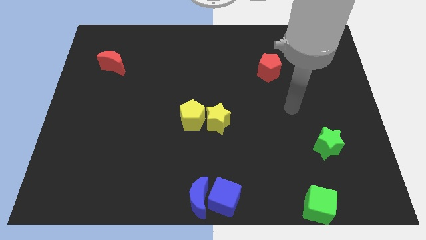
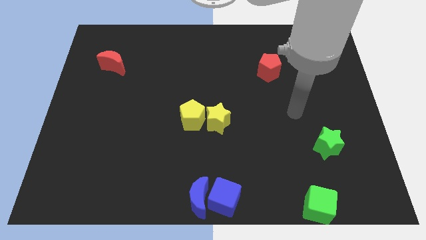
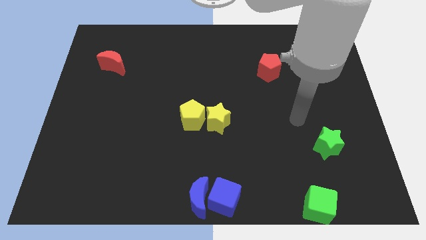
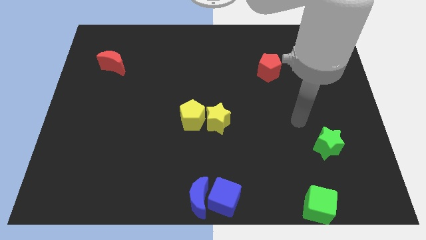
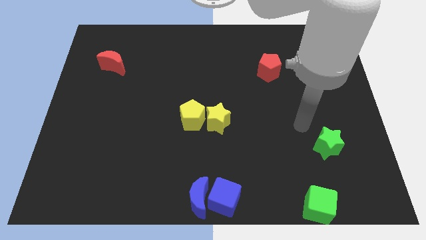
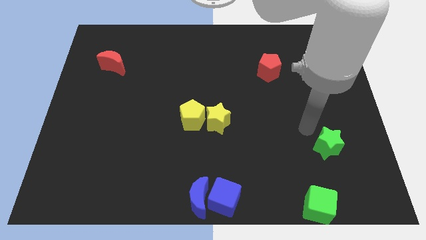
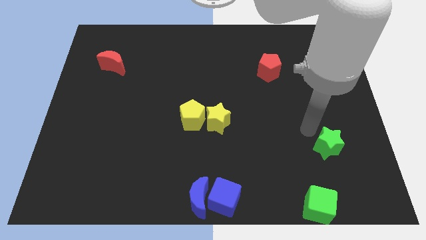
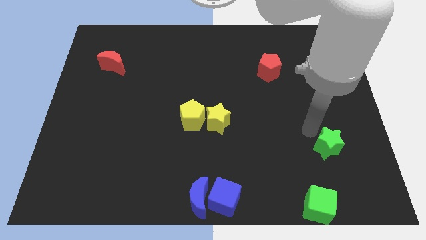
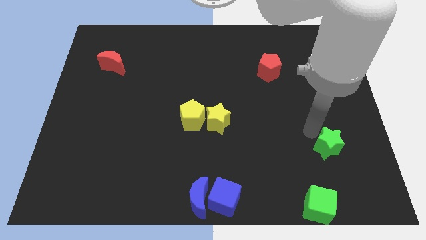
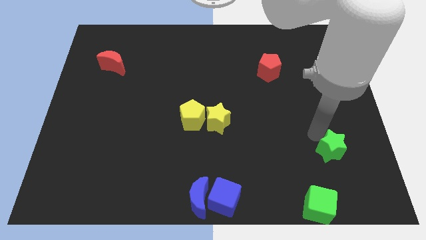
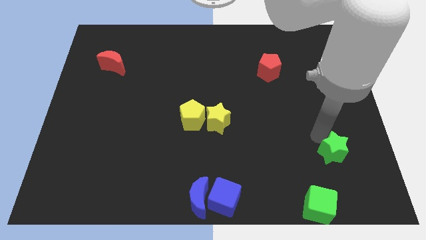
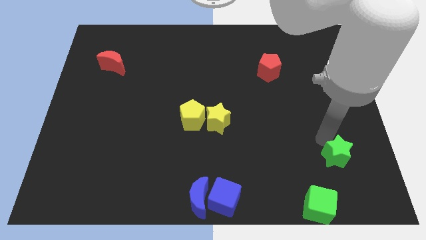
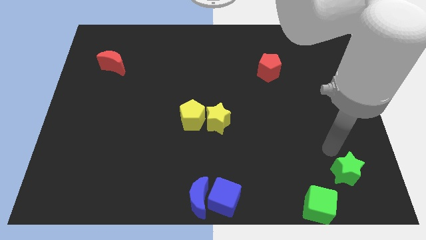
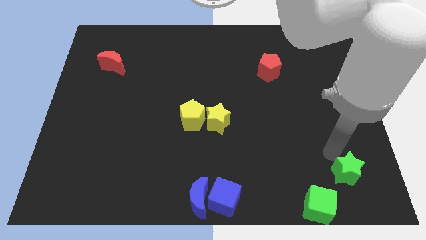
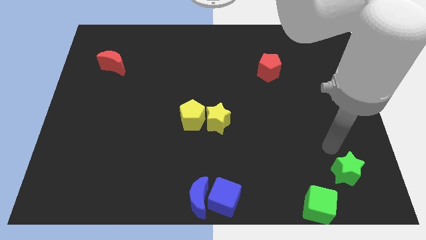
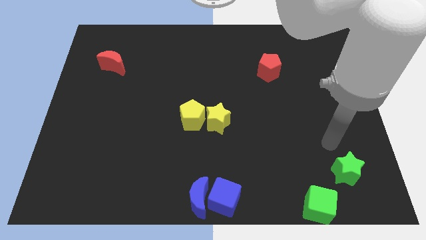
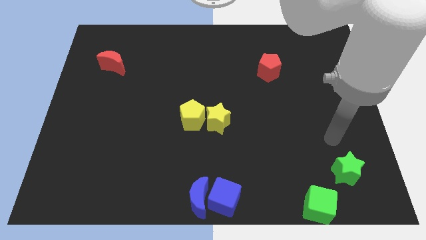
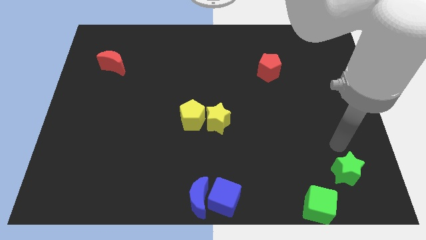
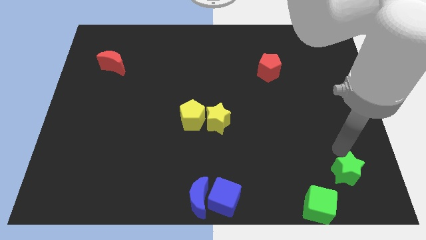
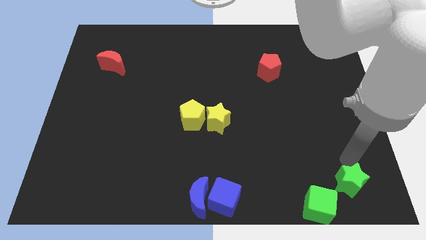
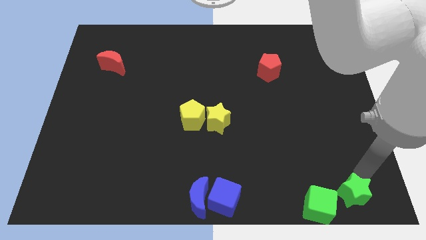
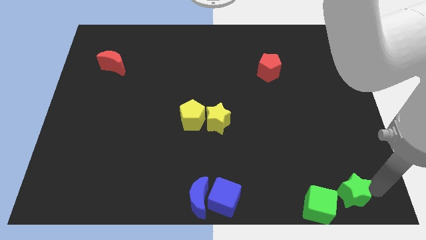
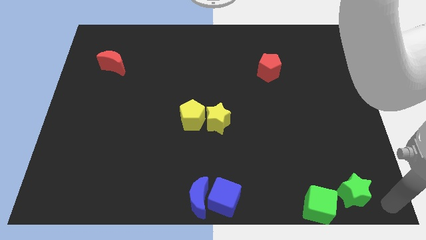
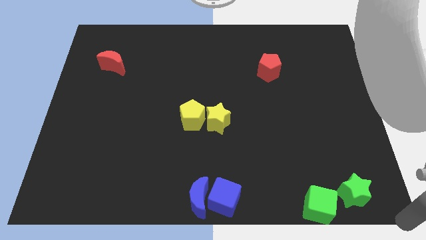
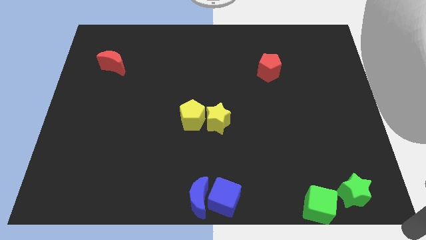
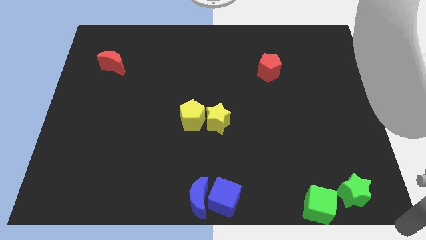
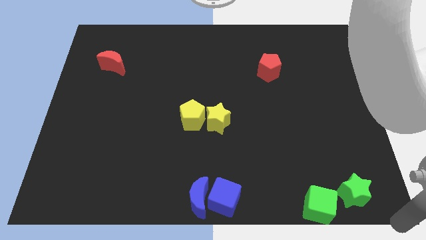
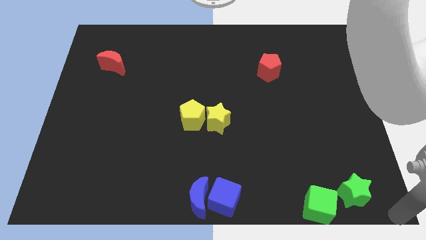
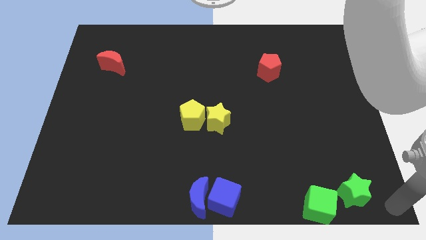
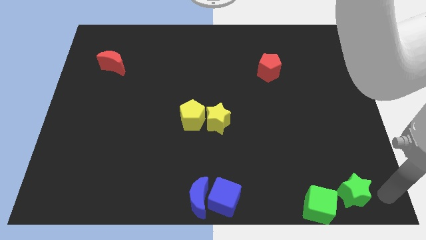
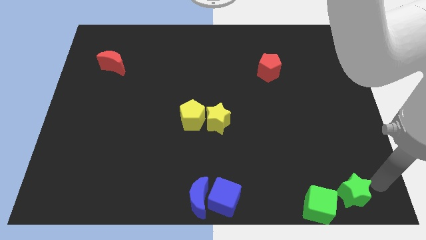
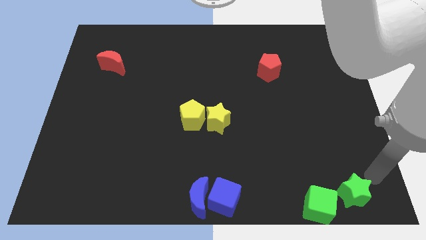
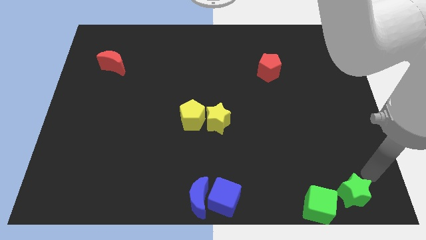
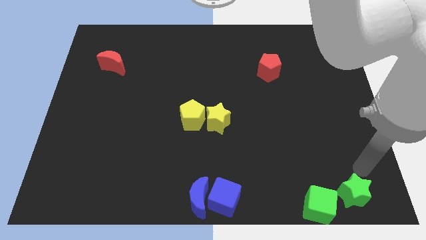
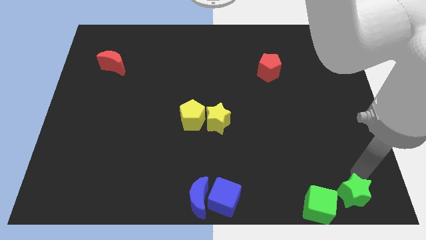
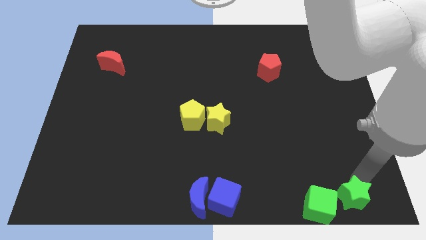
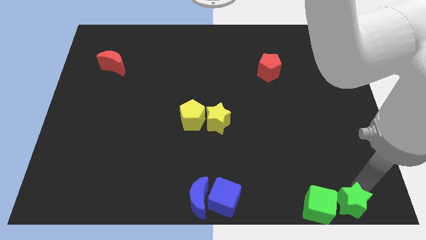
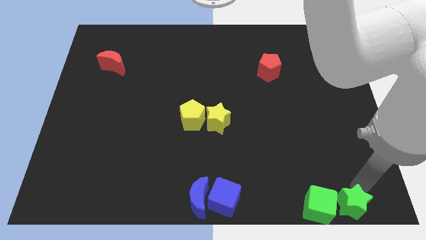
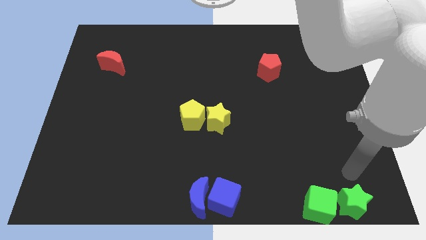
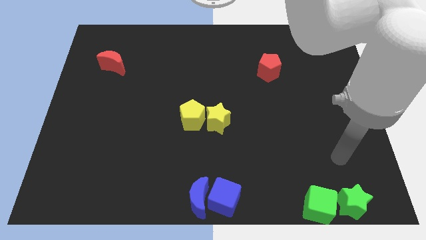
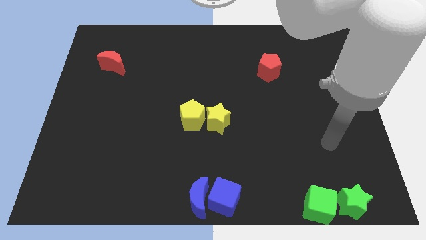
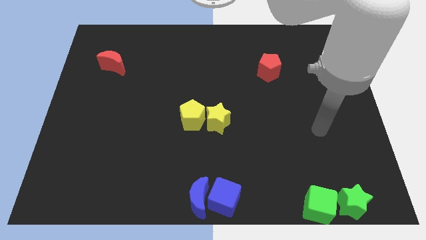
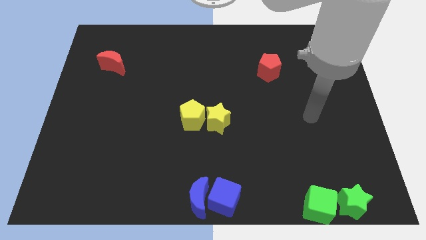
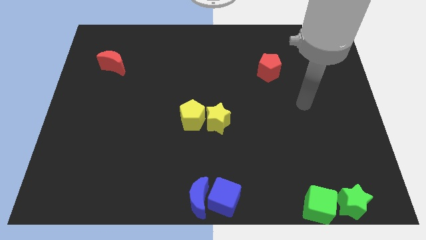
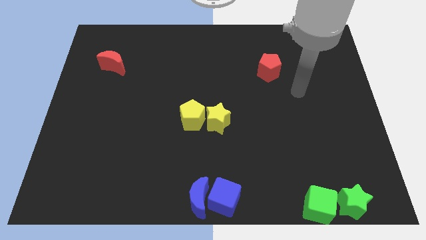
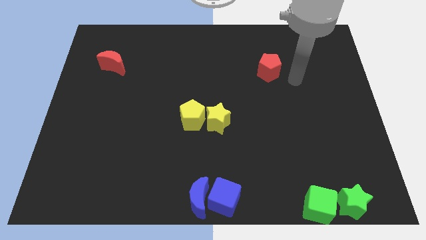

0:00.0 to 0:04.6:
place the green star to the right of the green cube

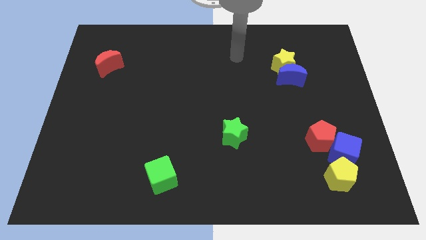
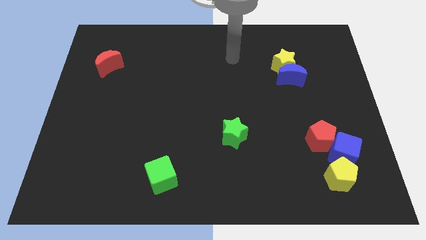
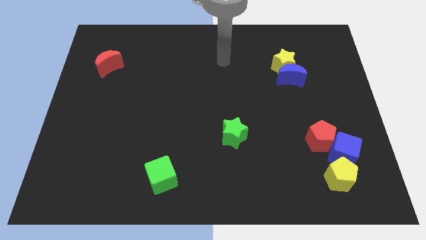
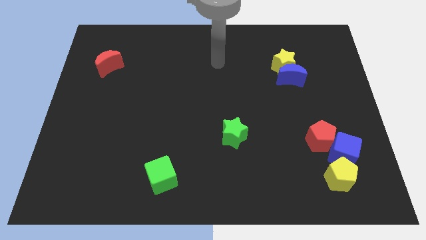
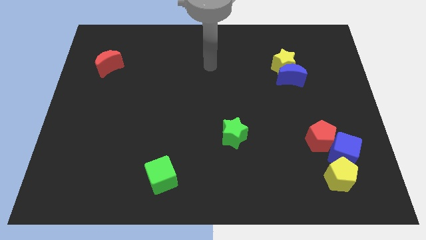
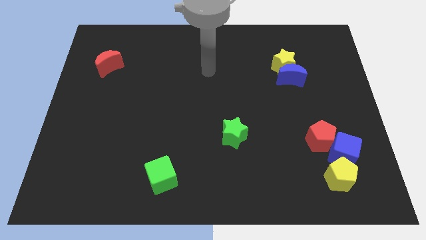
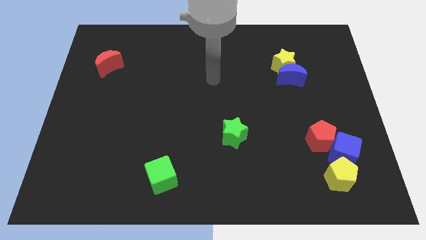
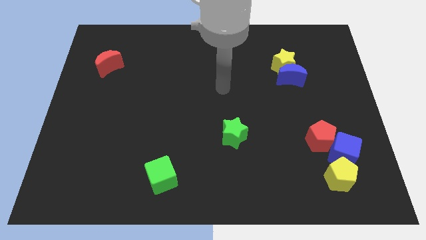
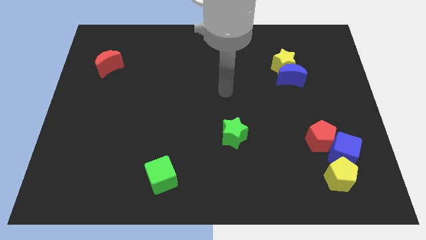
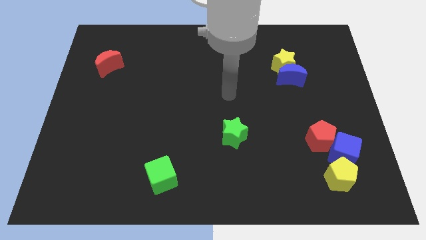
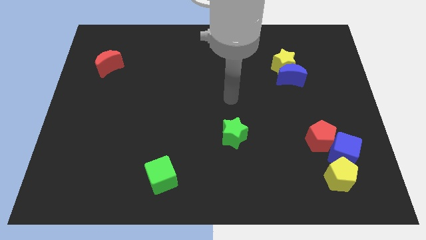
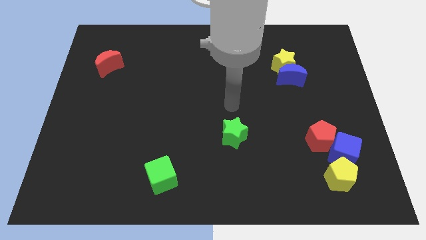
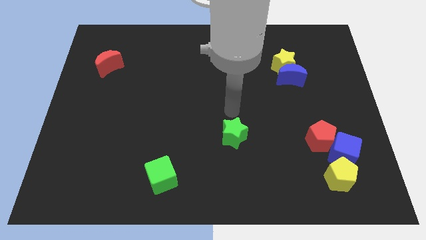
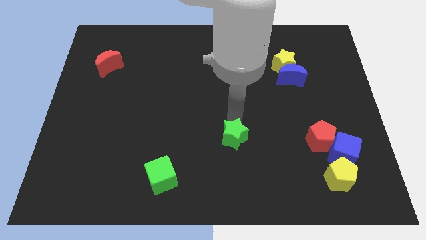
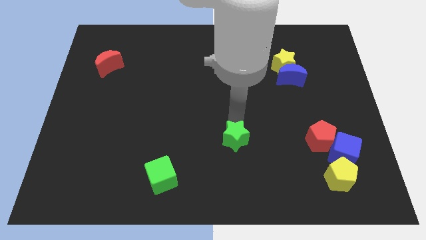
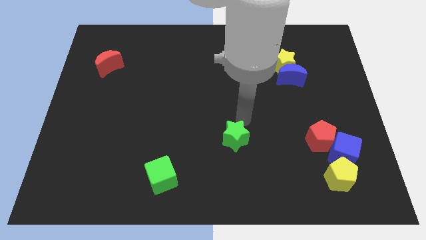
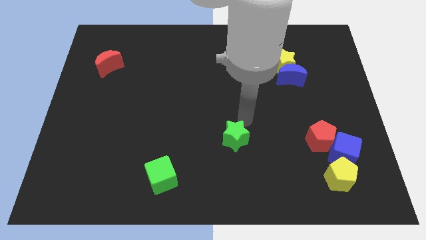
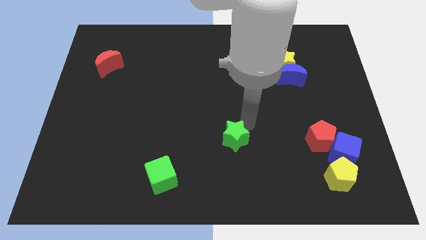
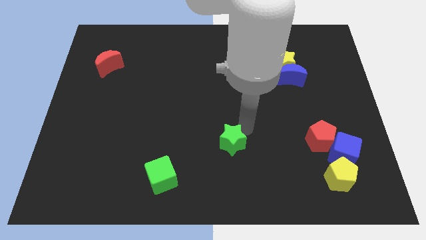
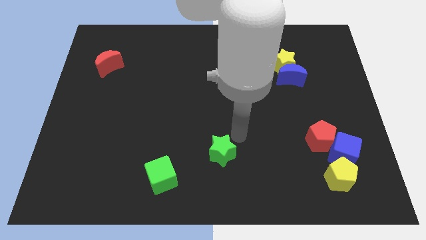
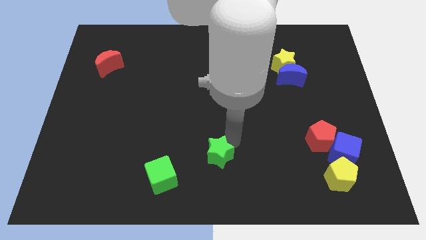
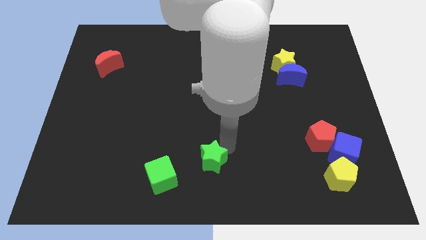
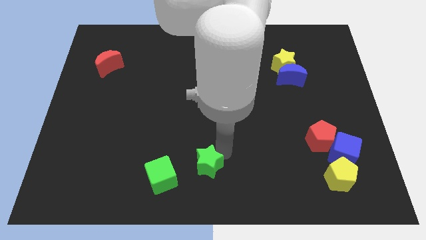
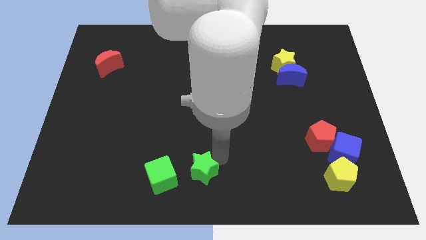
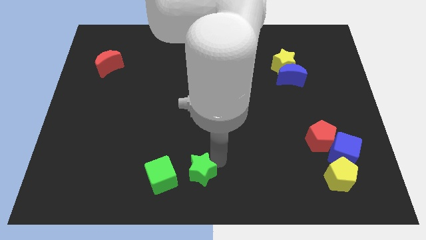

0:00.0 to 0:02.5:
move the green star right to the green cube

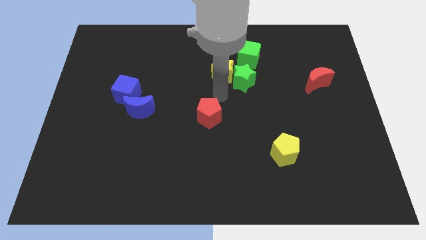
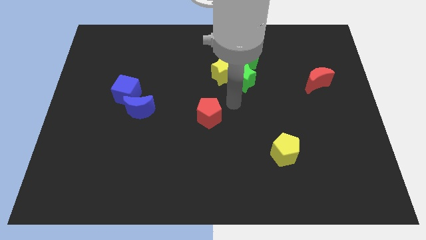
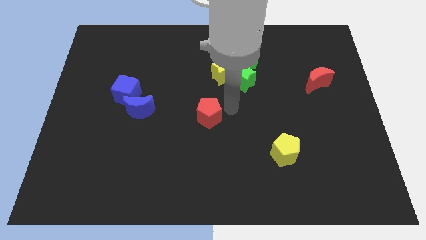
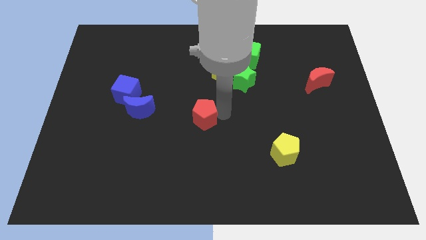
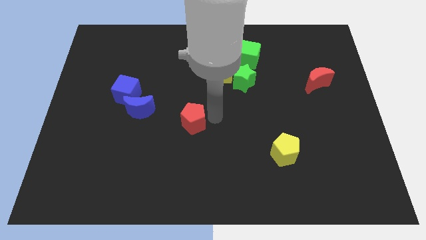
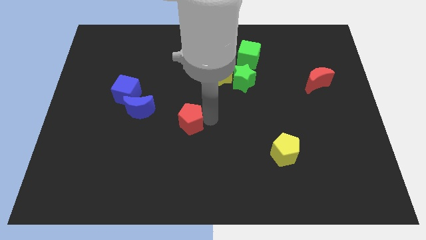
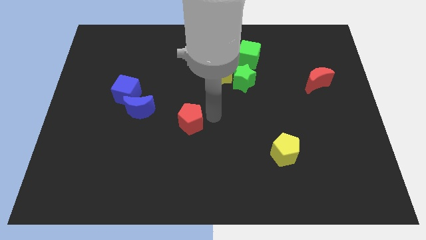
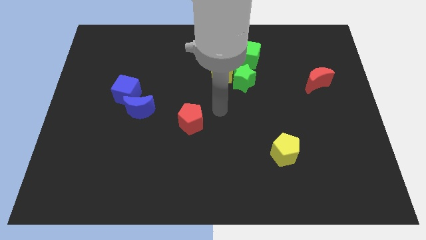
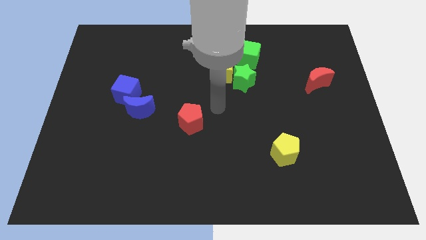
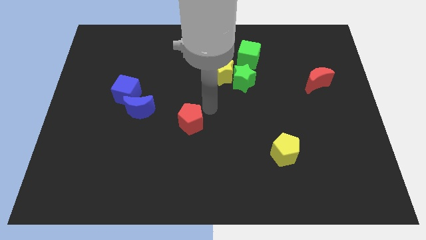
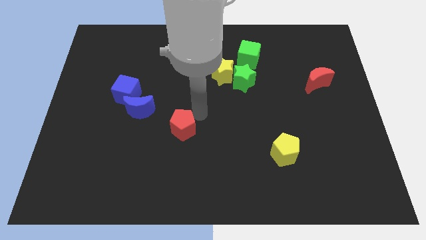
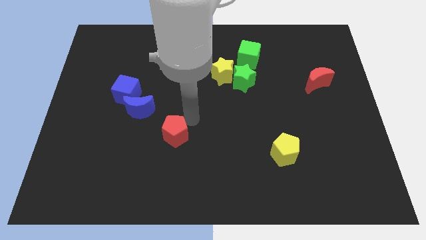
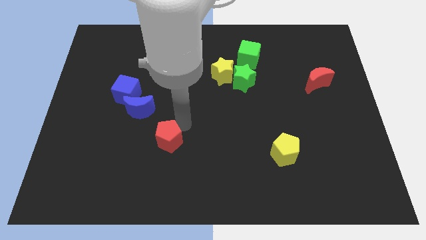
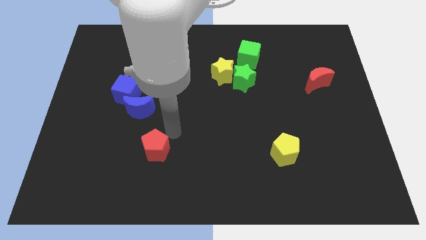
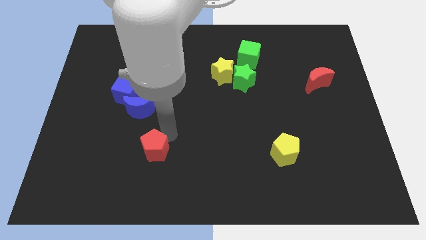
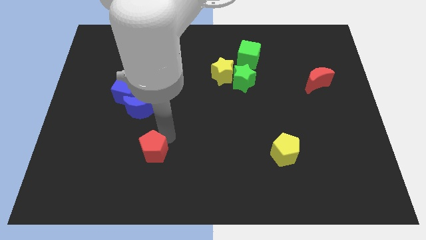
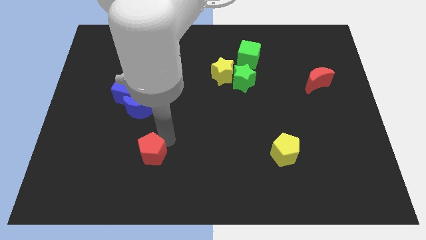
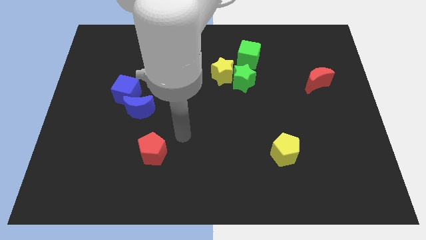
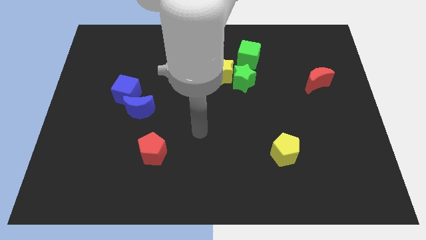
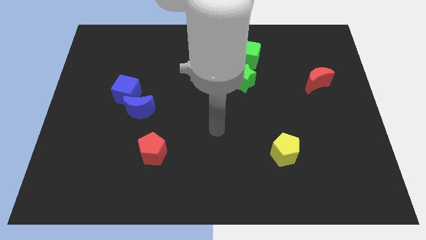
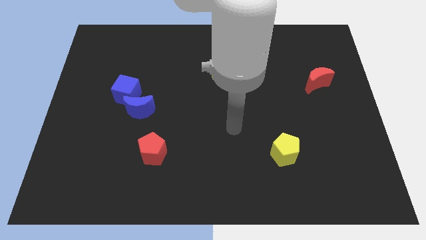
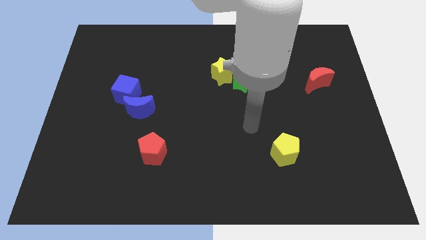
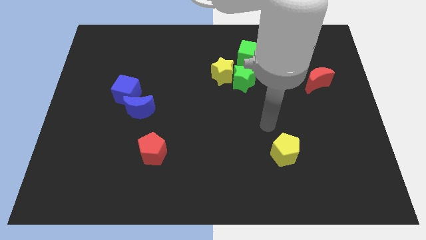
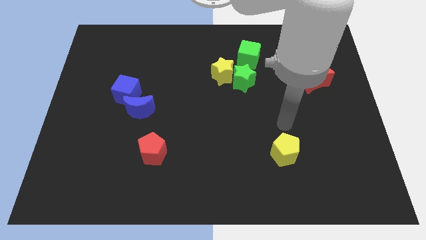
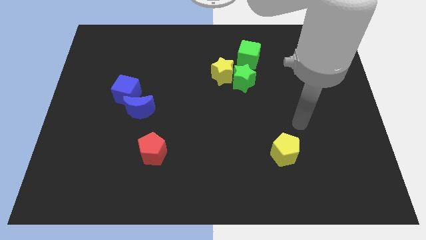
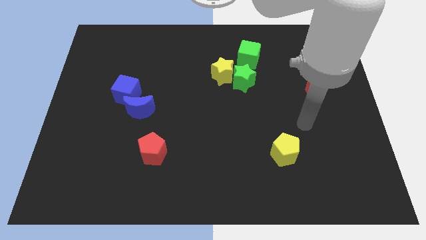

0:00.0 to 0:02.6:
push the red pentagon towards the bottom of the board and move away
